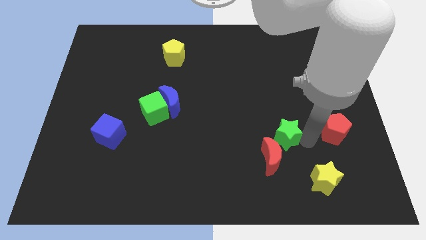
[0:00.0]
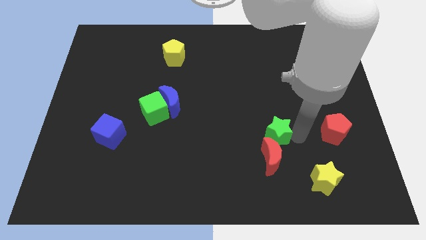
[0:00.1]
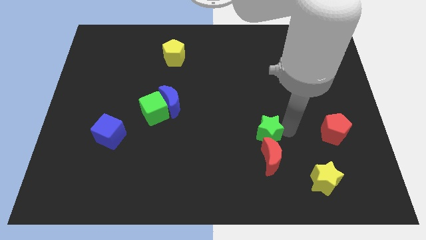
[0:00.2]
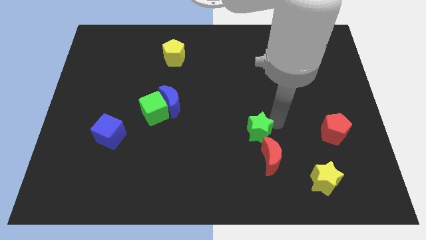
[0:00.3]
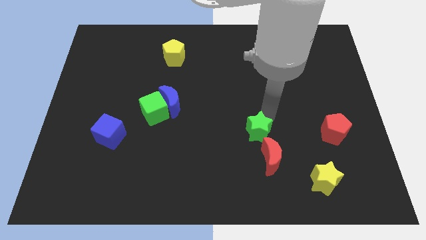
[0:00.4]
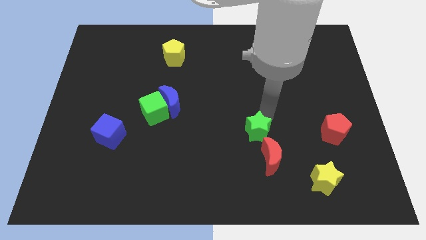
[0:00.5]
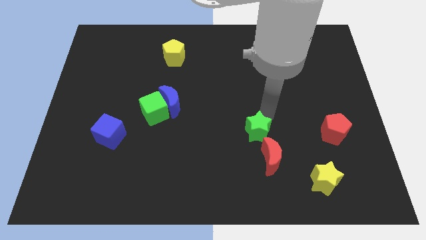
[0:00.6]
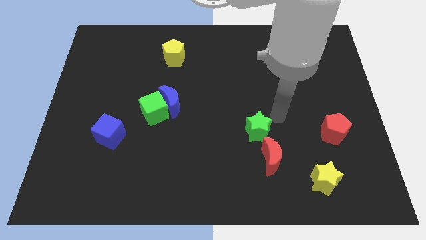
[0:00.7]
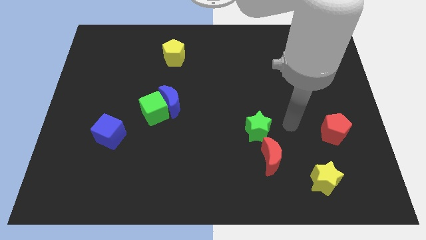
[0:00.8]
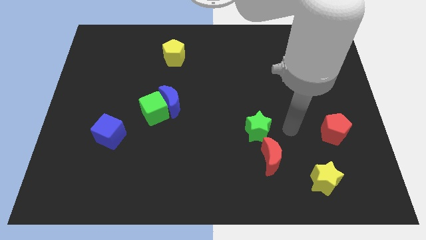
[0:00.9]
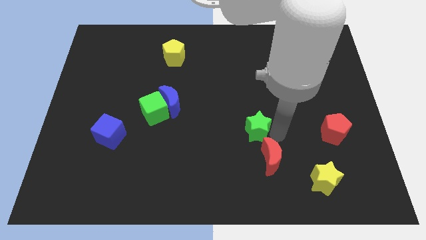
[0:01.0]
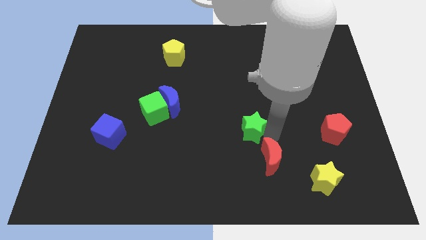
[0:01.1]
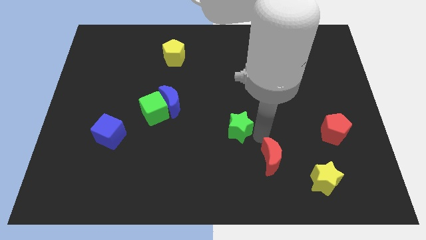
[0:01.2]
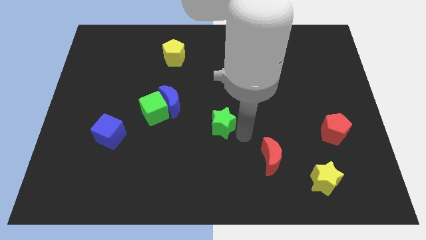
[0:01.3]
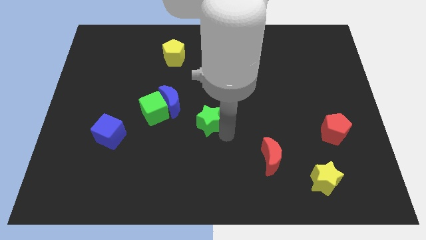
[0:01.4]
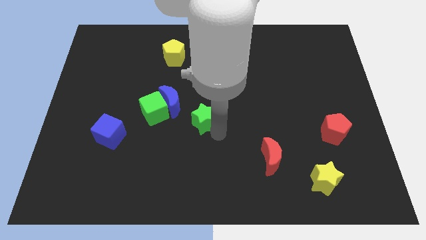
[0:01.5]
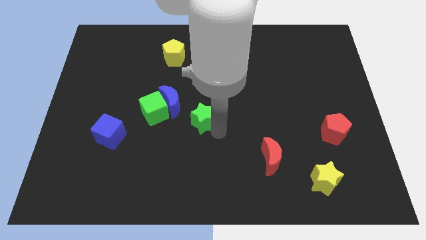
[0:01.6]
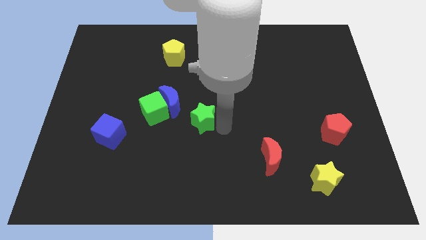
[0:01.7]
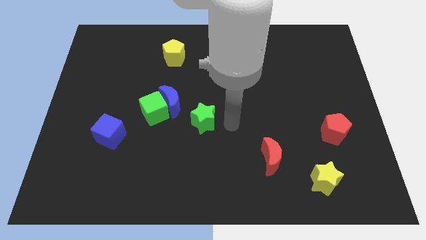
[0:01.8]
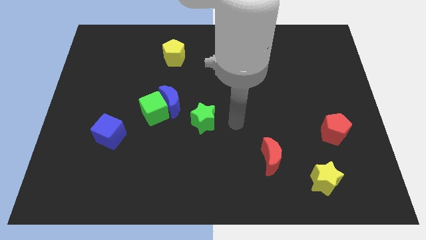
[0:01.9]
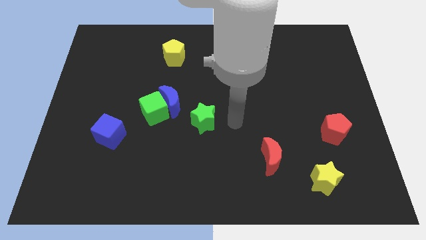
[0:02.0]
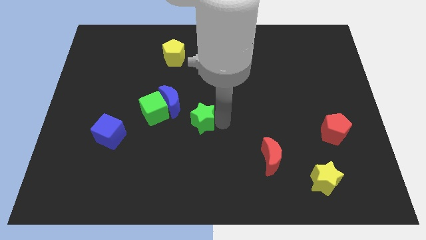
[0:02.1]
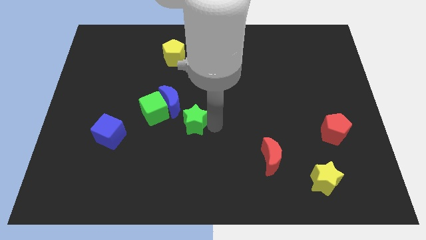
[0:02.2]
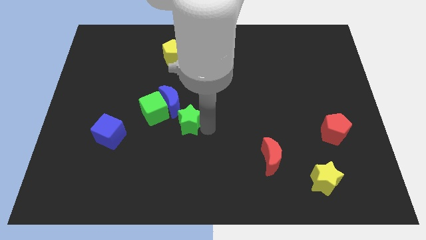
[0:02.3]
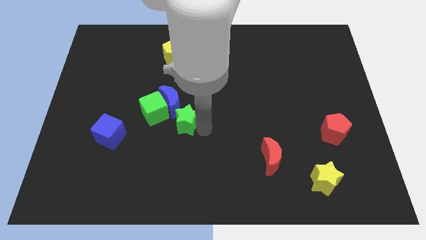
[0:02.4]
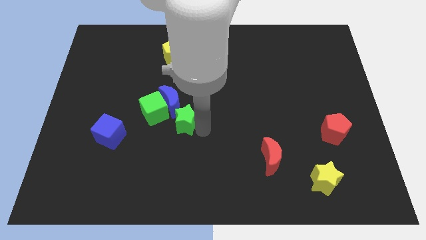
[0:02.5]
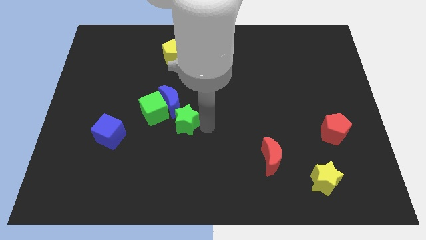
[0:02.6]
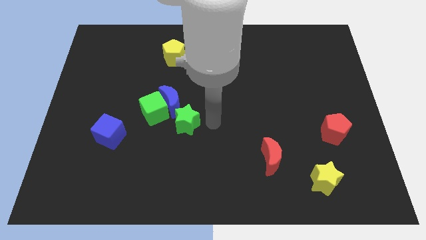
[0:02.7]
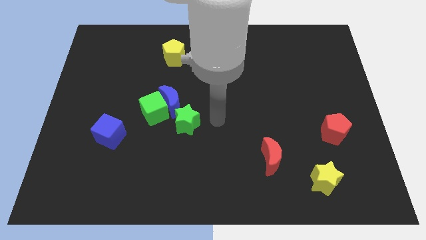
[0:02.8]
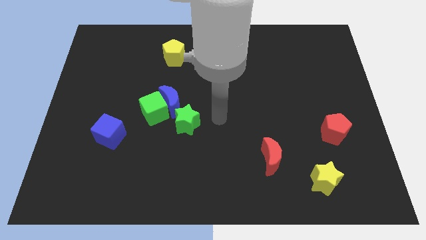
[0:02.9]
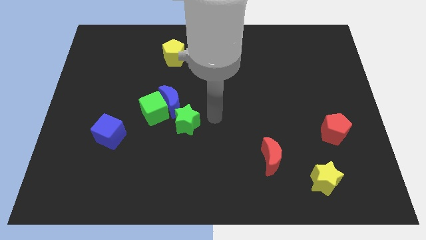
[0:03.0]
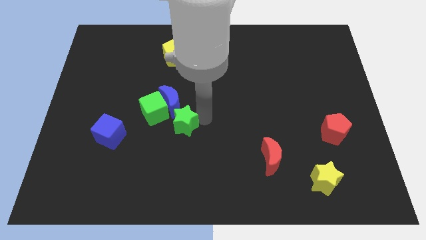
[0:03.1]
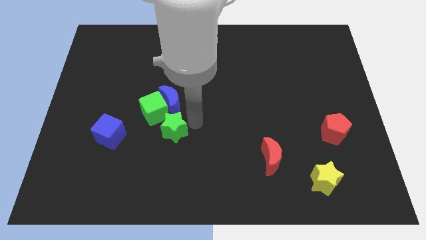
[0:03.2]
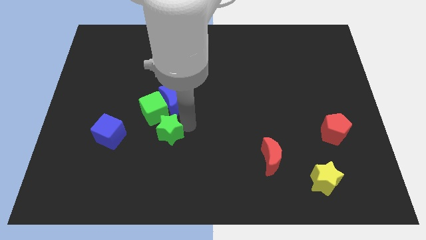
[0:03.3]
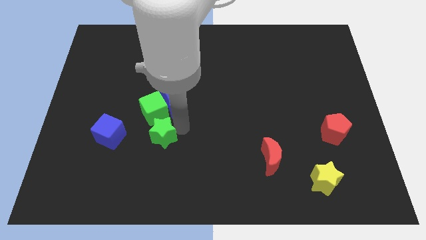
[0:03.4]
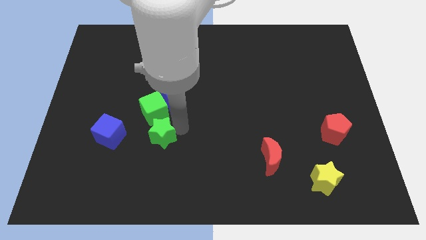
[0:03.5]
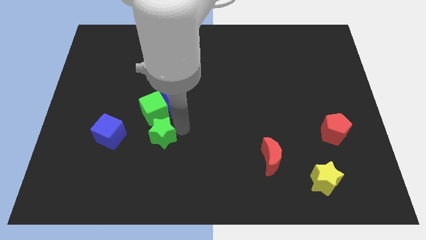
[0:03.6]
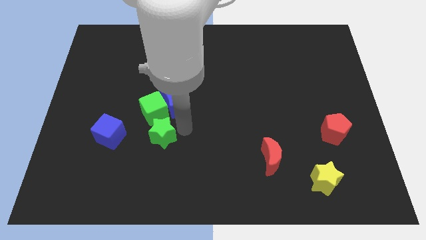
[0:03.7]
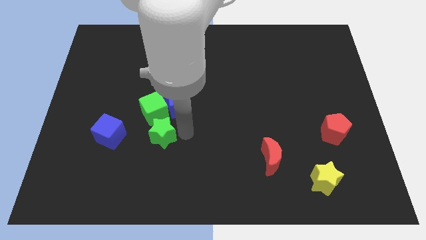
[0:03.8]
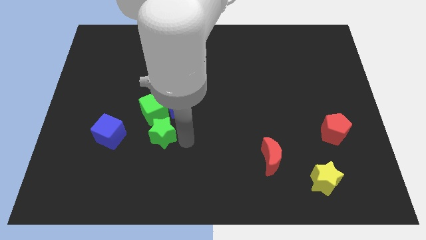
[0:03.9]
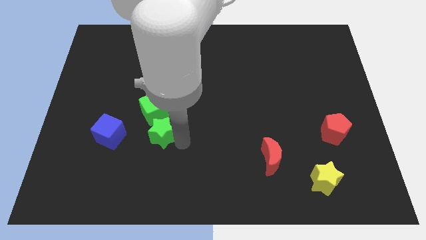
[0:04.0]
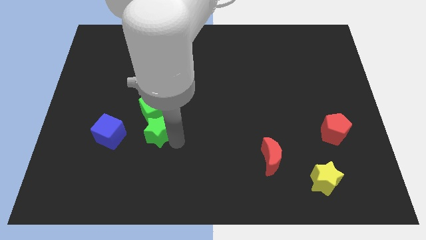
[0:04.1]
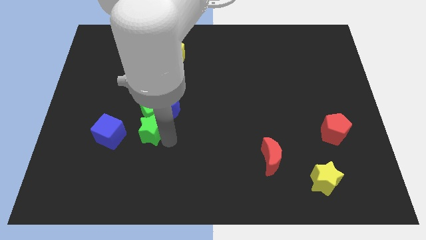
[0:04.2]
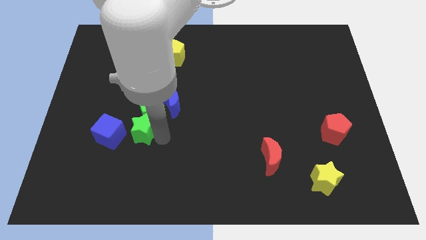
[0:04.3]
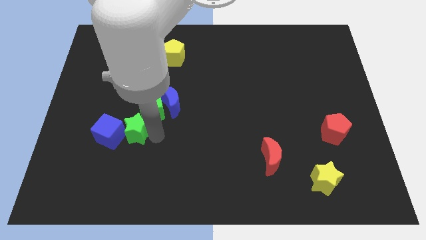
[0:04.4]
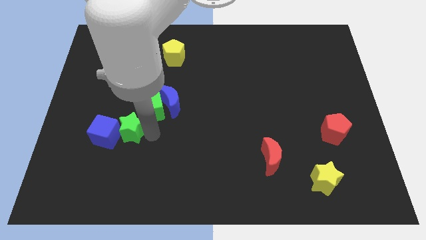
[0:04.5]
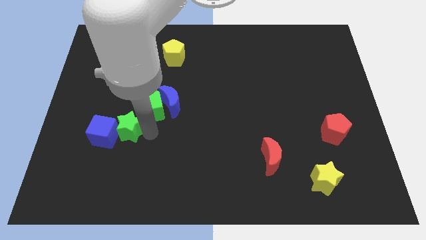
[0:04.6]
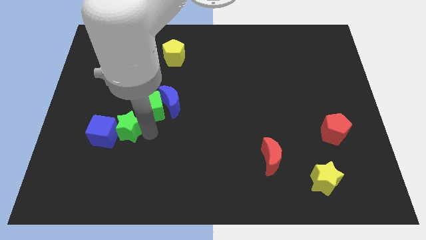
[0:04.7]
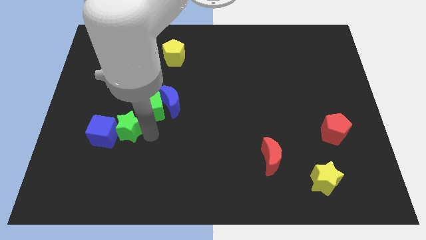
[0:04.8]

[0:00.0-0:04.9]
push the green star into the blue cube

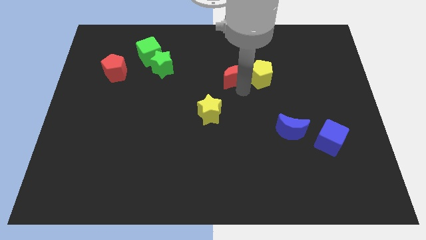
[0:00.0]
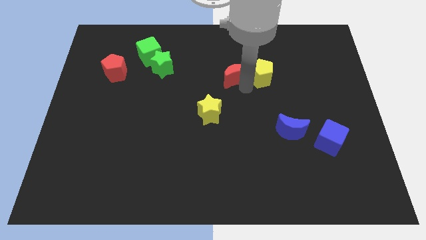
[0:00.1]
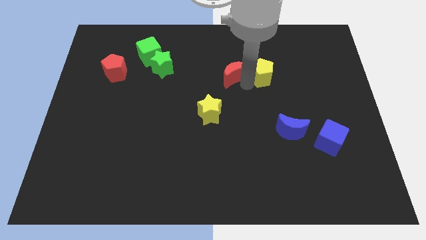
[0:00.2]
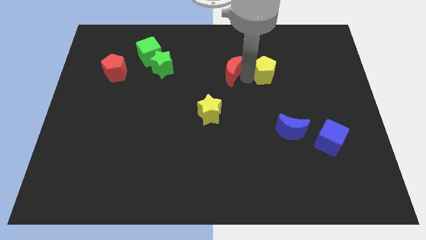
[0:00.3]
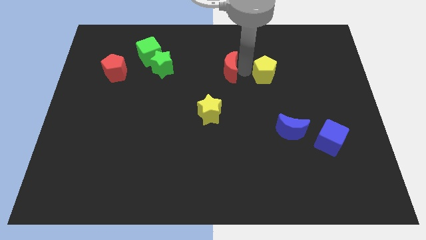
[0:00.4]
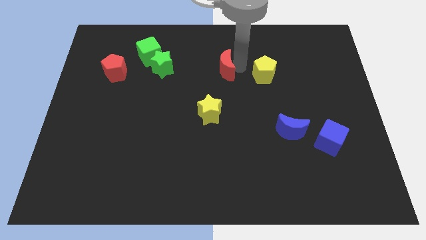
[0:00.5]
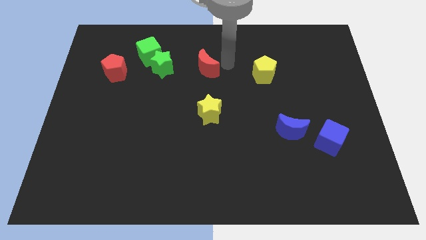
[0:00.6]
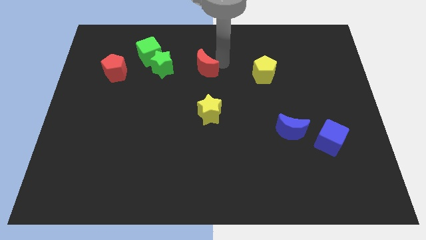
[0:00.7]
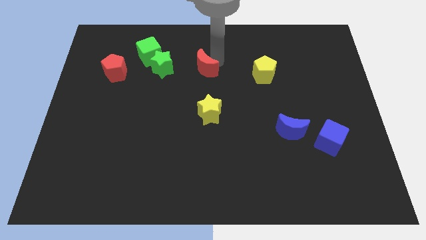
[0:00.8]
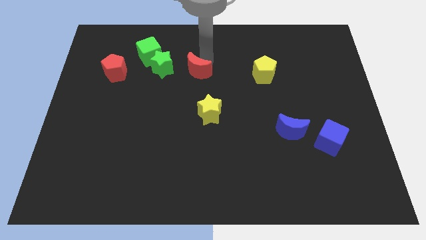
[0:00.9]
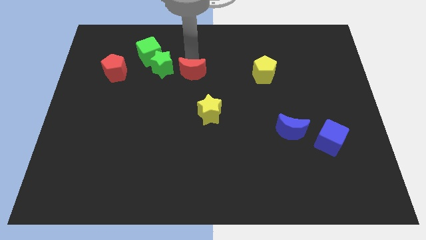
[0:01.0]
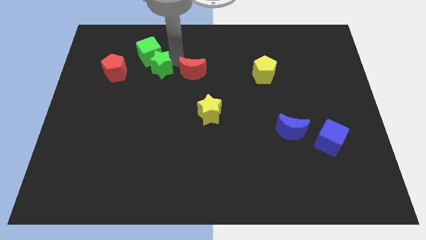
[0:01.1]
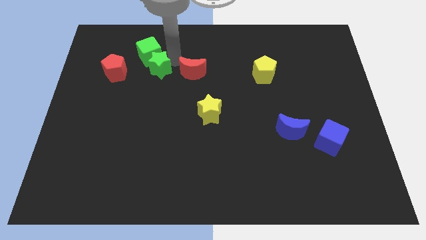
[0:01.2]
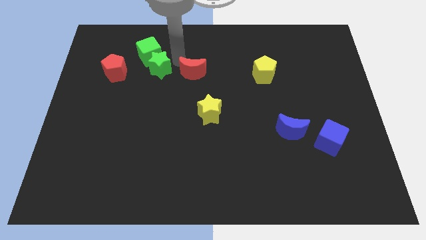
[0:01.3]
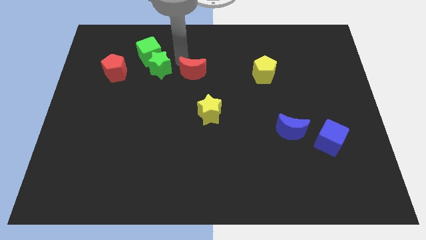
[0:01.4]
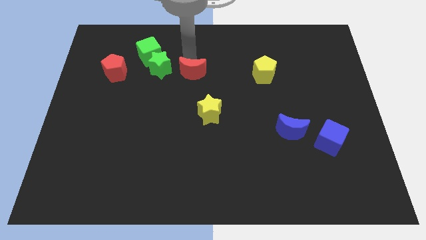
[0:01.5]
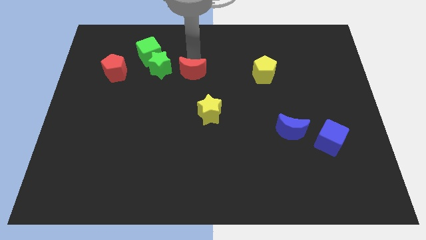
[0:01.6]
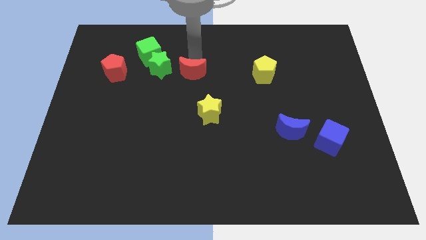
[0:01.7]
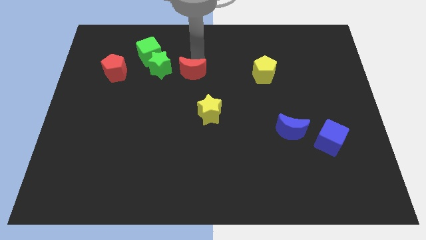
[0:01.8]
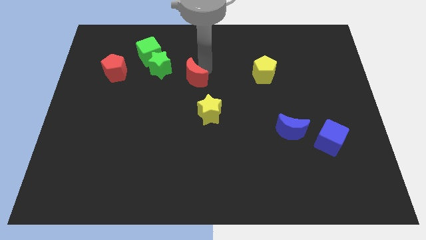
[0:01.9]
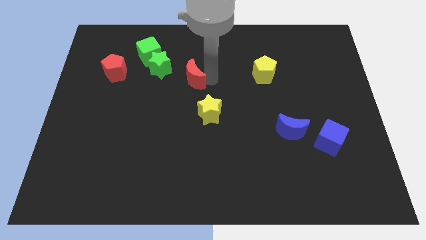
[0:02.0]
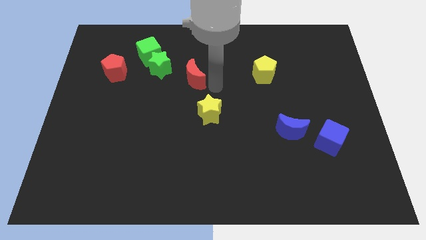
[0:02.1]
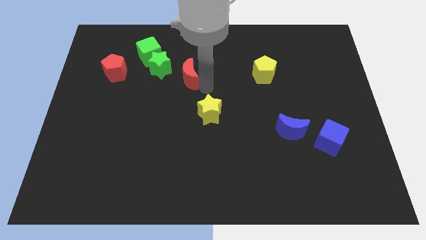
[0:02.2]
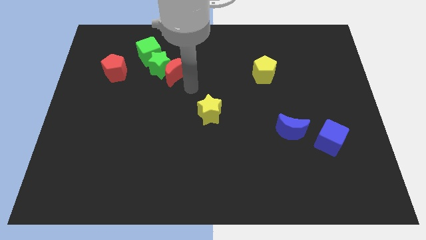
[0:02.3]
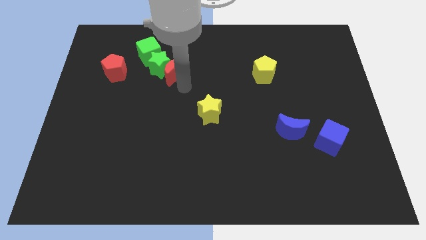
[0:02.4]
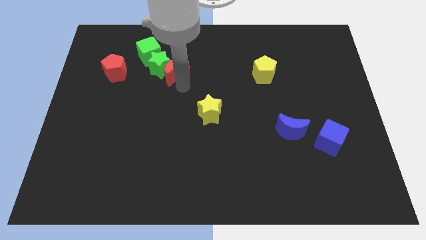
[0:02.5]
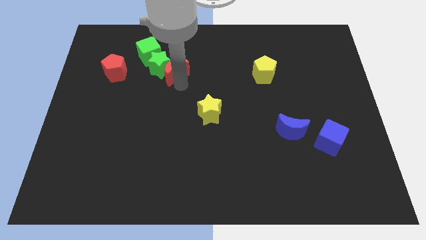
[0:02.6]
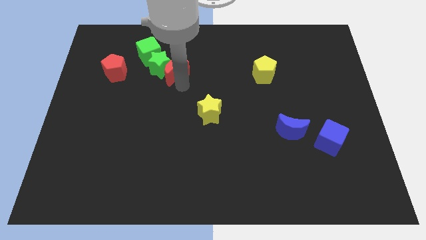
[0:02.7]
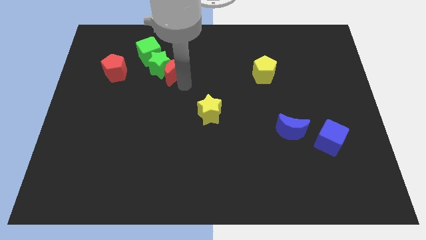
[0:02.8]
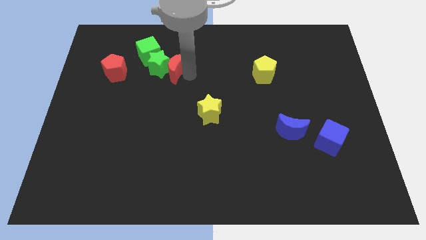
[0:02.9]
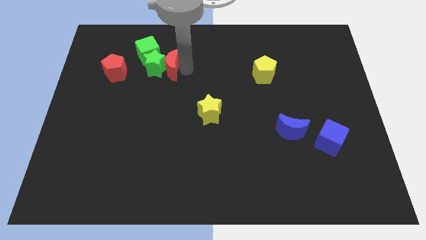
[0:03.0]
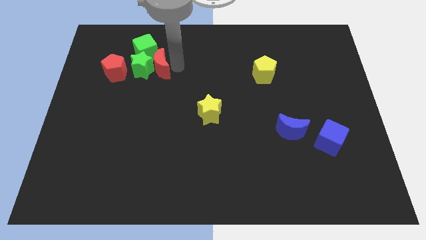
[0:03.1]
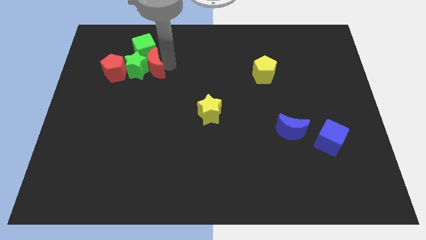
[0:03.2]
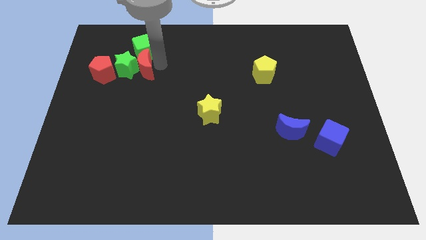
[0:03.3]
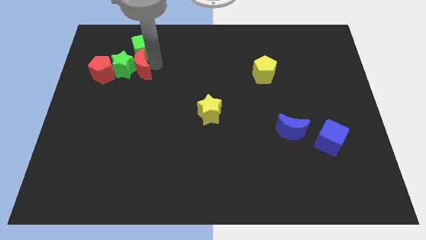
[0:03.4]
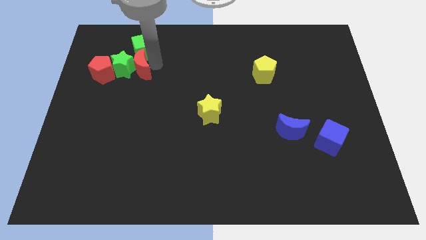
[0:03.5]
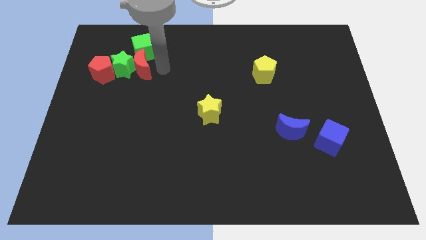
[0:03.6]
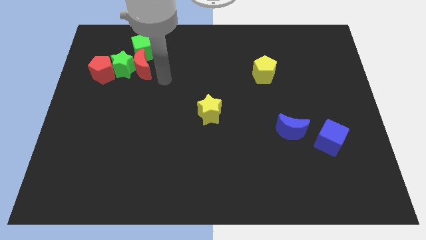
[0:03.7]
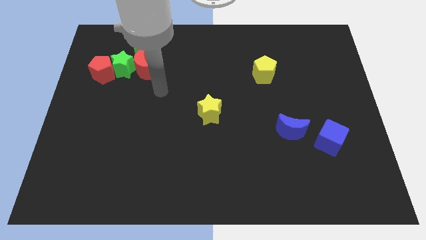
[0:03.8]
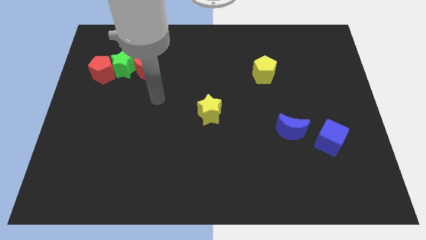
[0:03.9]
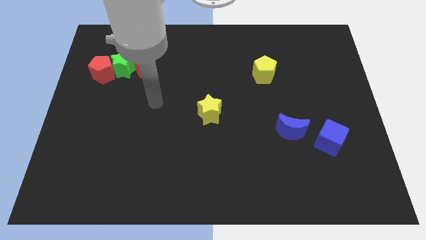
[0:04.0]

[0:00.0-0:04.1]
move the red moon to the right side of the green star
